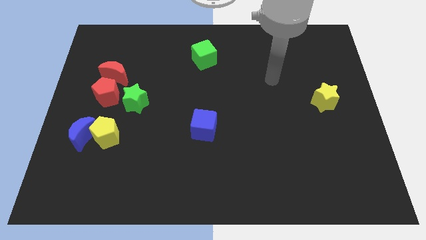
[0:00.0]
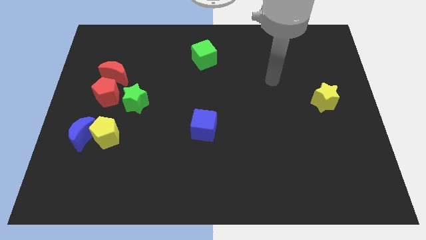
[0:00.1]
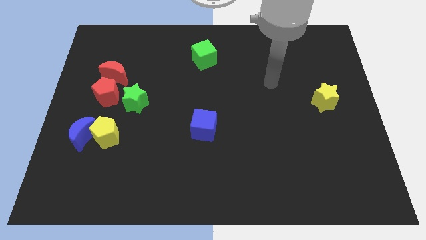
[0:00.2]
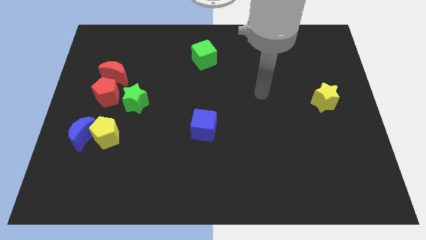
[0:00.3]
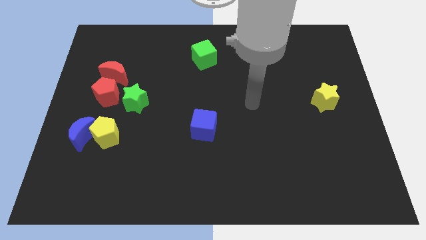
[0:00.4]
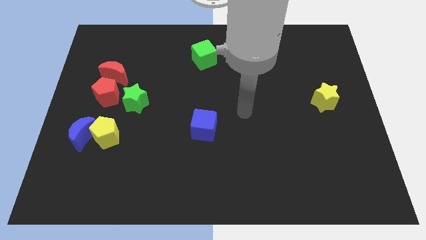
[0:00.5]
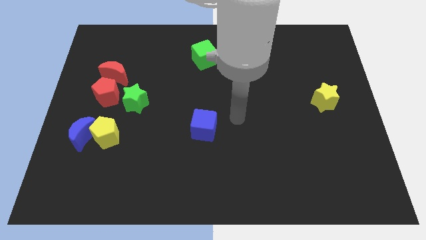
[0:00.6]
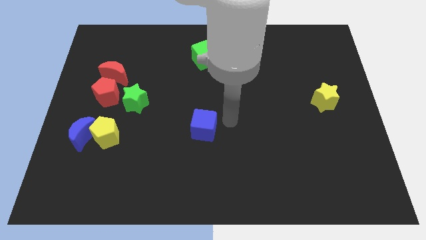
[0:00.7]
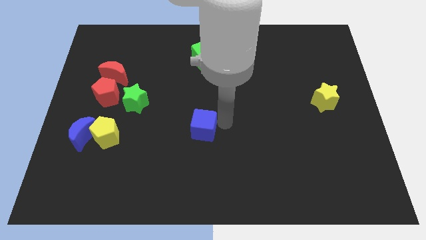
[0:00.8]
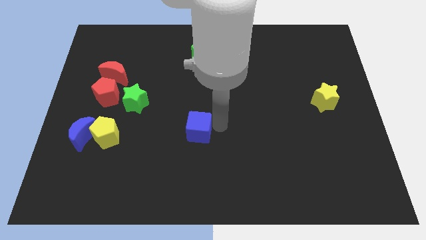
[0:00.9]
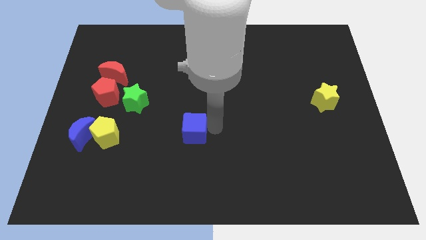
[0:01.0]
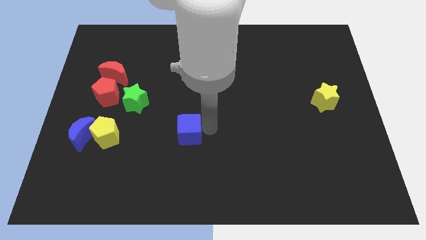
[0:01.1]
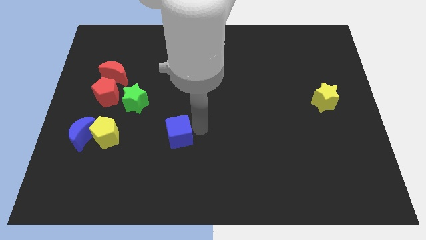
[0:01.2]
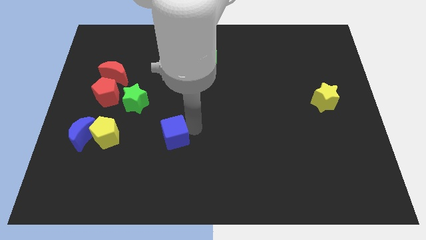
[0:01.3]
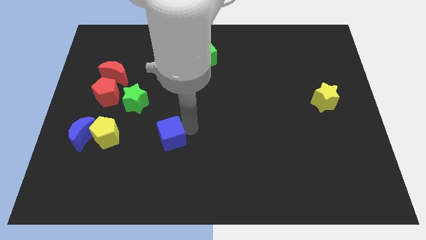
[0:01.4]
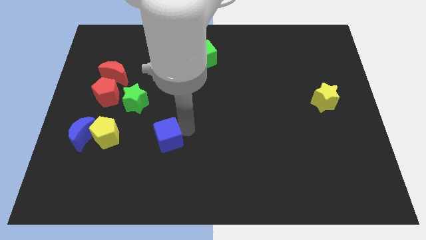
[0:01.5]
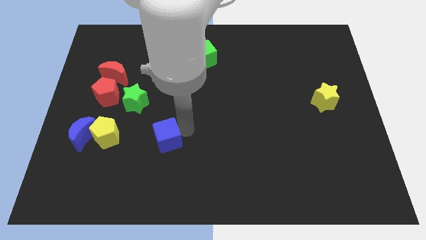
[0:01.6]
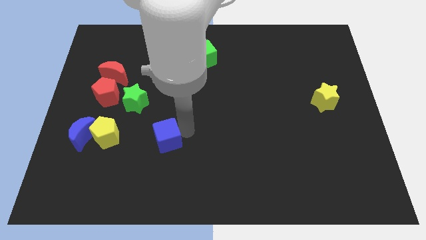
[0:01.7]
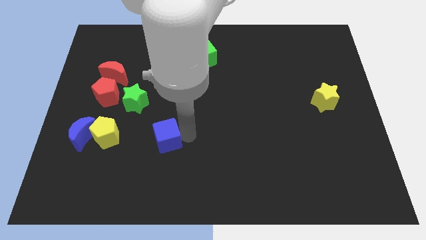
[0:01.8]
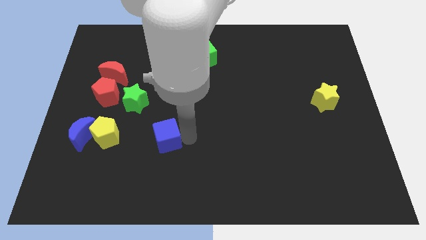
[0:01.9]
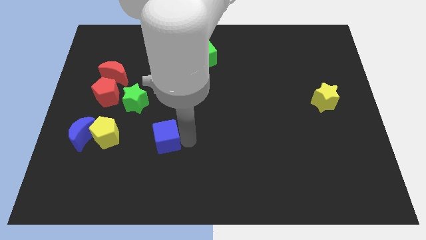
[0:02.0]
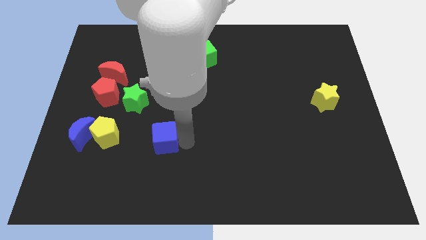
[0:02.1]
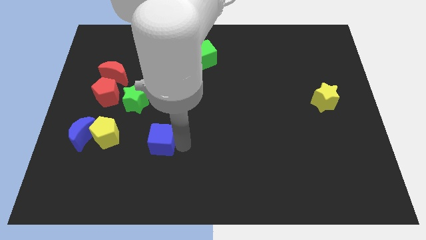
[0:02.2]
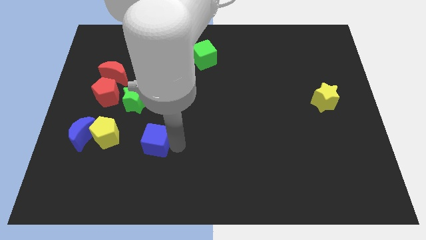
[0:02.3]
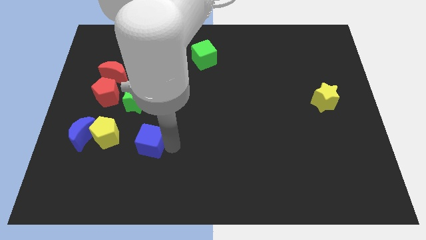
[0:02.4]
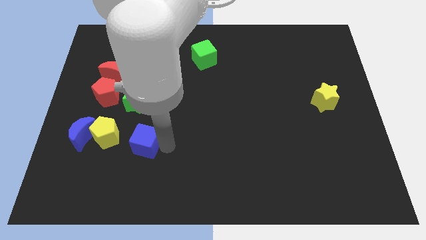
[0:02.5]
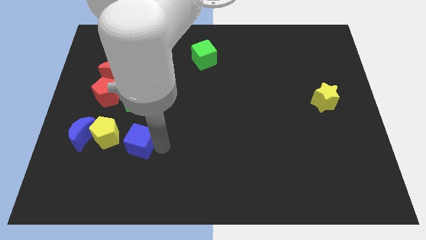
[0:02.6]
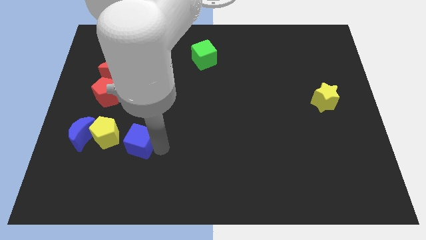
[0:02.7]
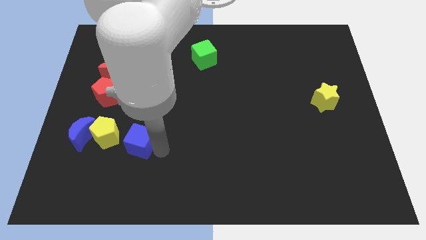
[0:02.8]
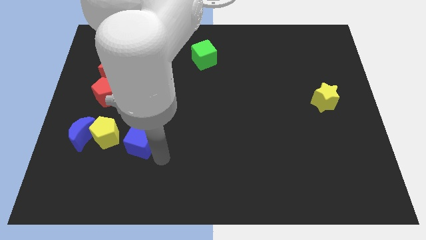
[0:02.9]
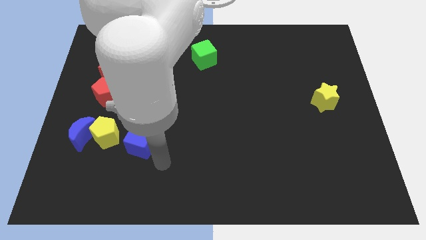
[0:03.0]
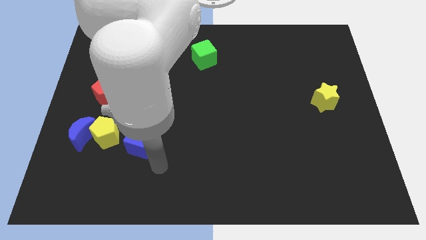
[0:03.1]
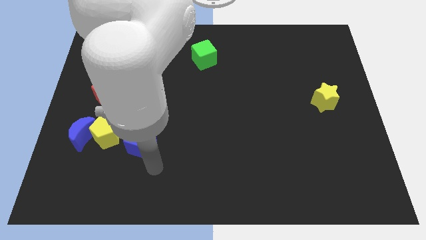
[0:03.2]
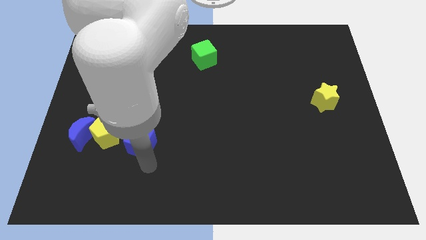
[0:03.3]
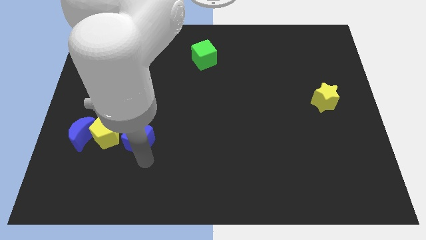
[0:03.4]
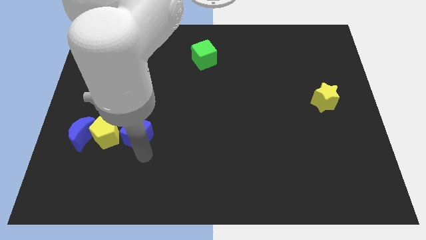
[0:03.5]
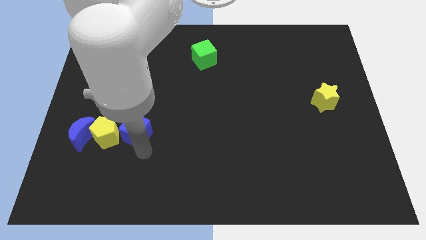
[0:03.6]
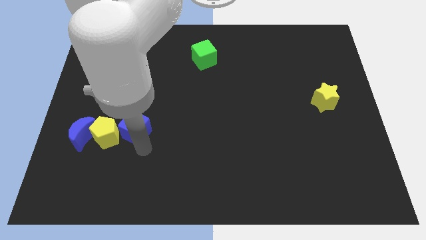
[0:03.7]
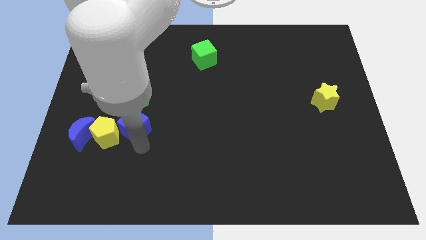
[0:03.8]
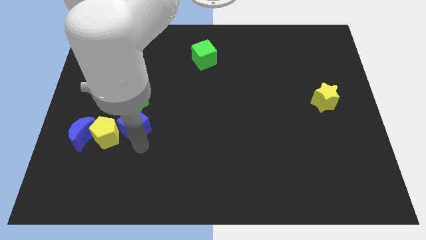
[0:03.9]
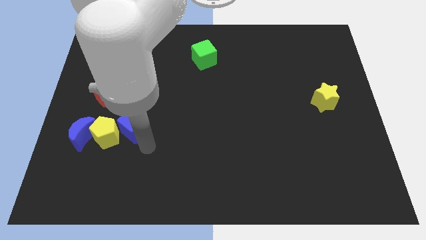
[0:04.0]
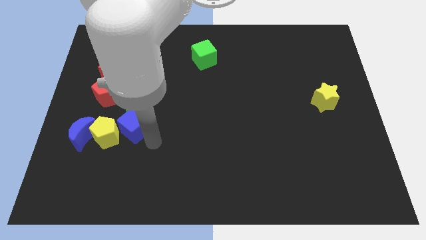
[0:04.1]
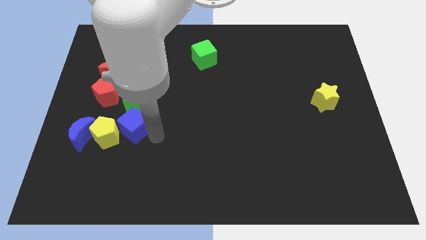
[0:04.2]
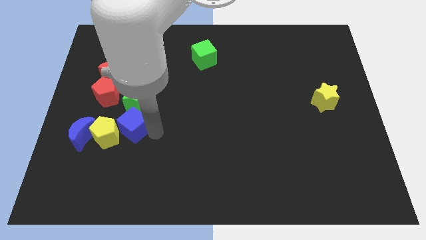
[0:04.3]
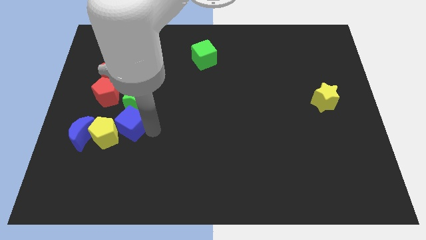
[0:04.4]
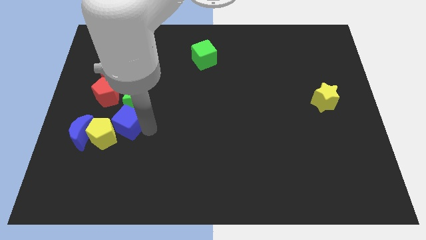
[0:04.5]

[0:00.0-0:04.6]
move the blue cube next to the yellow pentagon

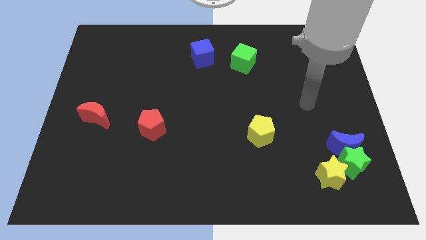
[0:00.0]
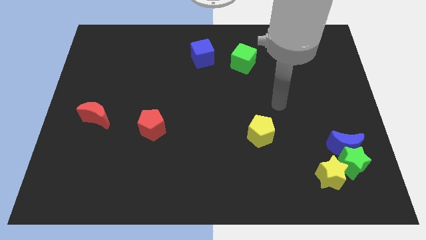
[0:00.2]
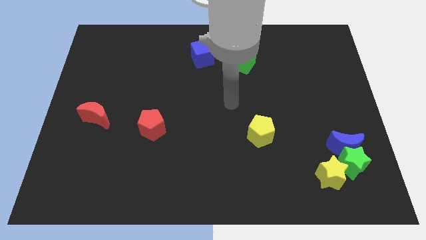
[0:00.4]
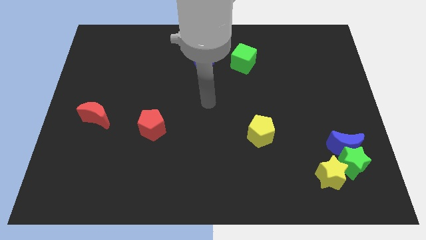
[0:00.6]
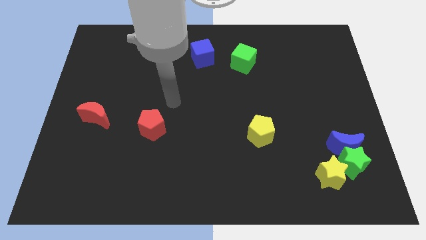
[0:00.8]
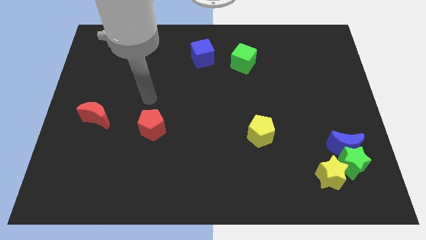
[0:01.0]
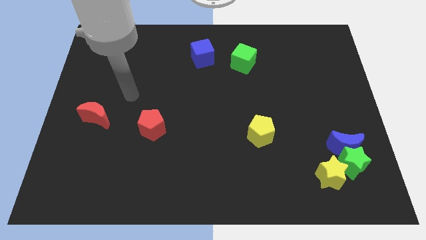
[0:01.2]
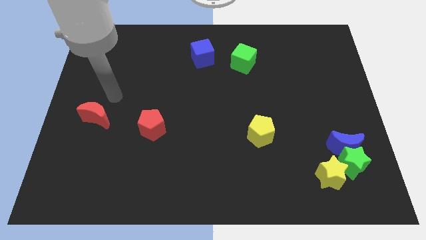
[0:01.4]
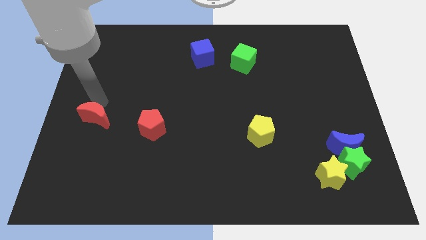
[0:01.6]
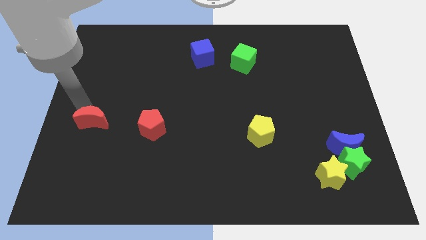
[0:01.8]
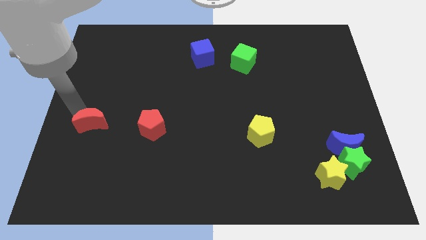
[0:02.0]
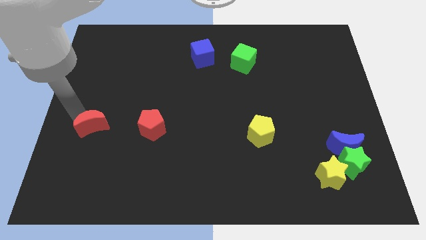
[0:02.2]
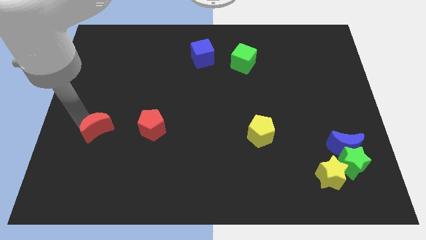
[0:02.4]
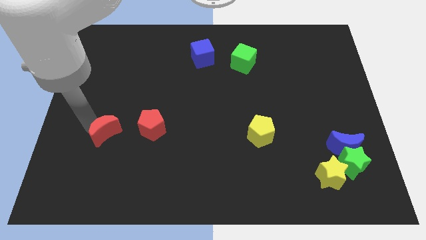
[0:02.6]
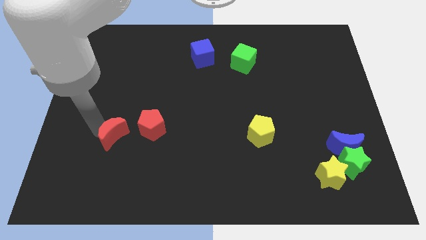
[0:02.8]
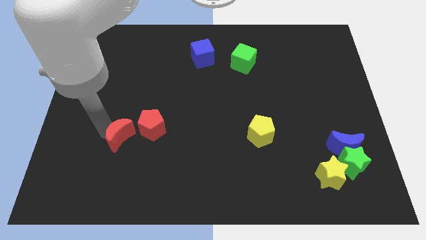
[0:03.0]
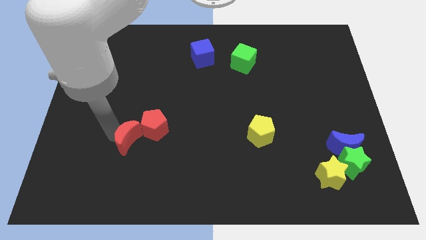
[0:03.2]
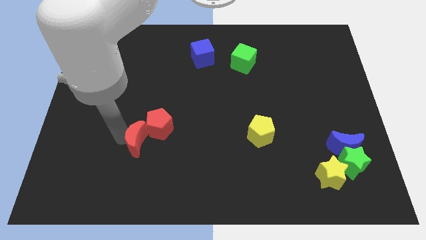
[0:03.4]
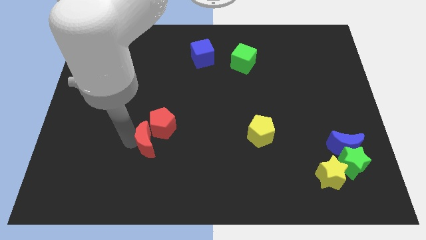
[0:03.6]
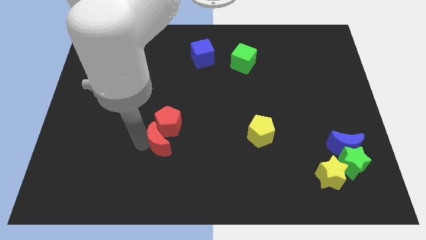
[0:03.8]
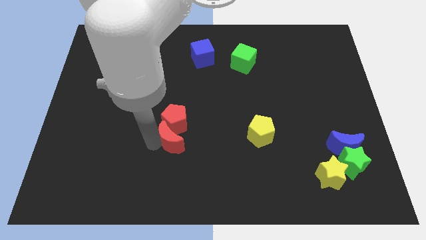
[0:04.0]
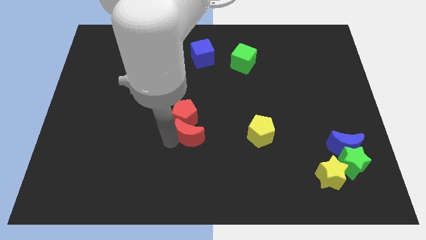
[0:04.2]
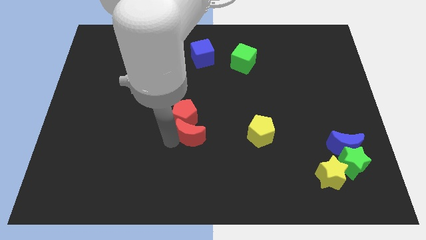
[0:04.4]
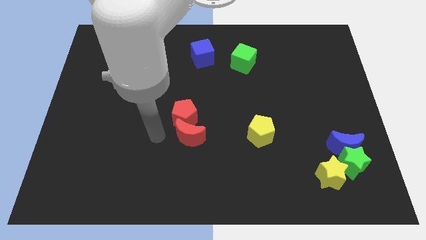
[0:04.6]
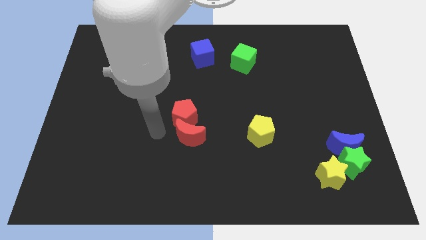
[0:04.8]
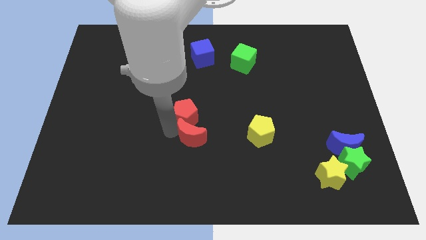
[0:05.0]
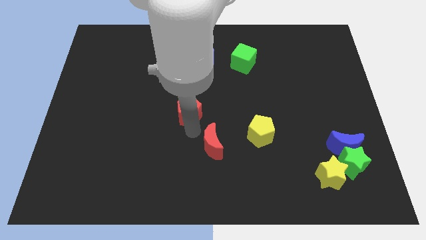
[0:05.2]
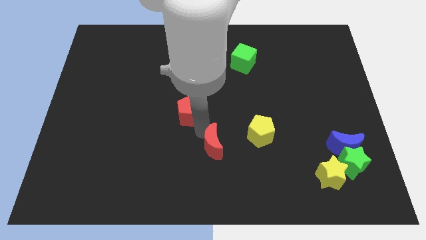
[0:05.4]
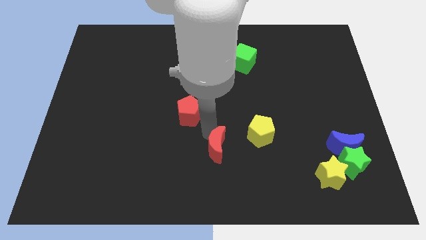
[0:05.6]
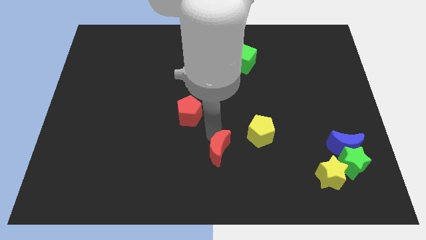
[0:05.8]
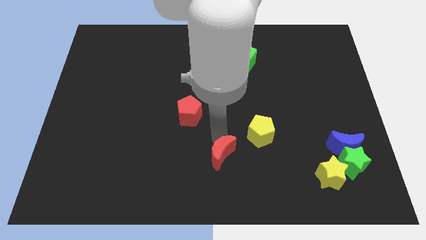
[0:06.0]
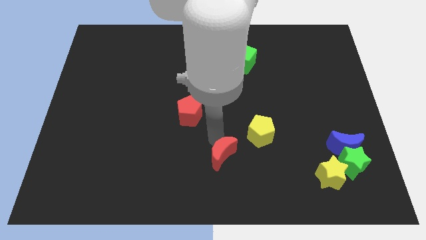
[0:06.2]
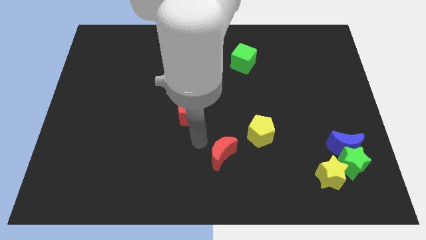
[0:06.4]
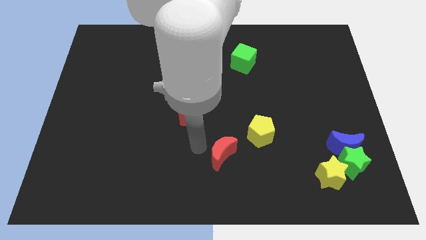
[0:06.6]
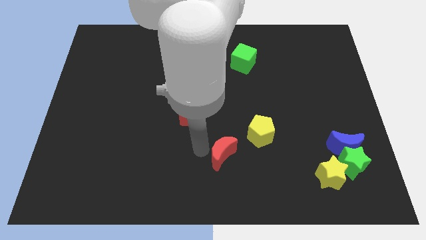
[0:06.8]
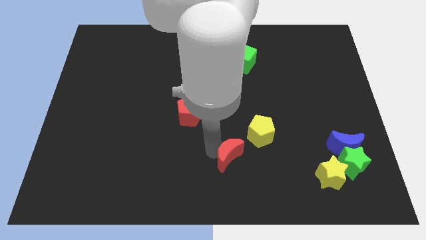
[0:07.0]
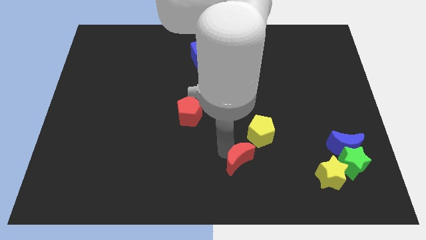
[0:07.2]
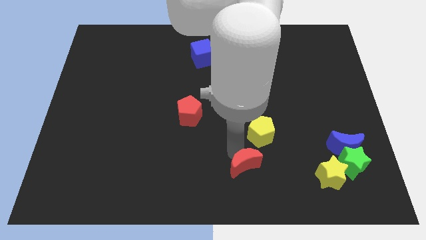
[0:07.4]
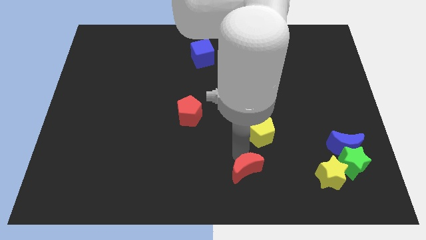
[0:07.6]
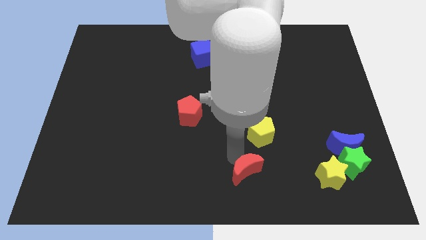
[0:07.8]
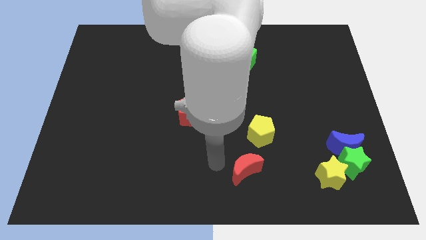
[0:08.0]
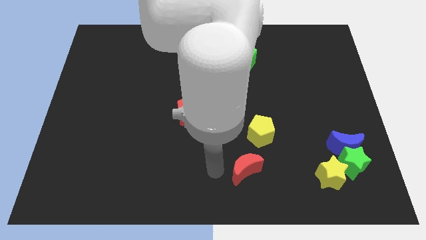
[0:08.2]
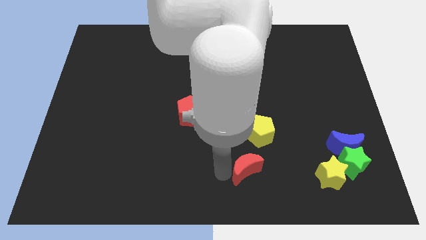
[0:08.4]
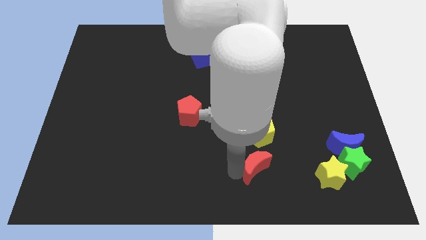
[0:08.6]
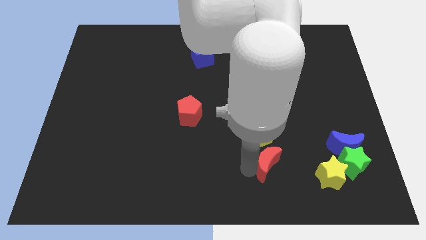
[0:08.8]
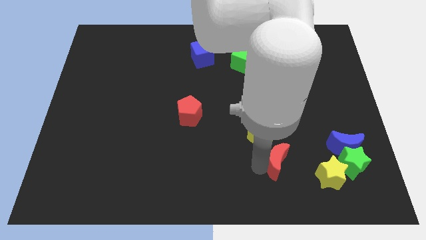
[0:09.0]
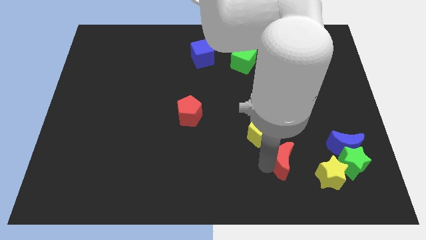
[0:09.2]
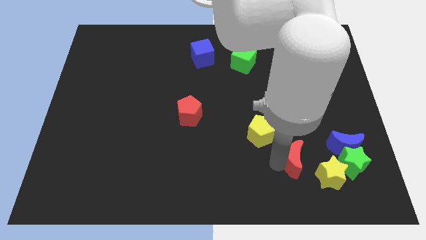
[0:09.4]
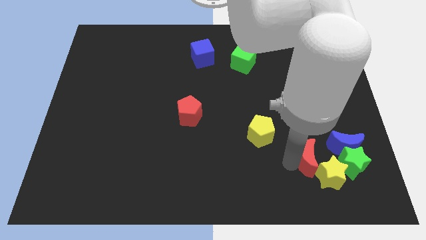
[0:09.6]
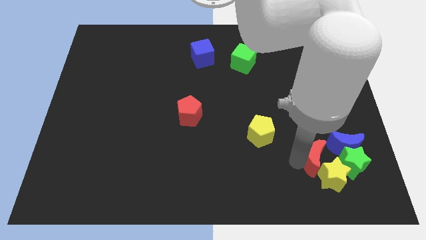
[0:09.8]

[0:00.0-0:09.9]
push the red moon close to the yellow star
